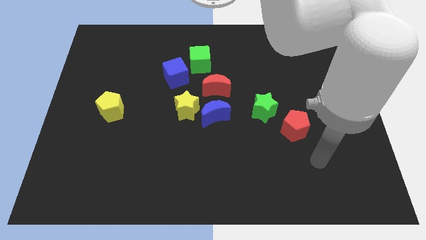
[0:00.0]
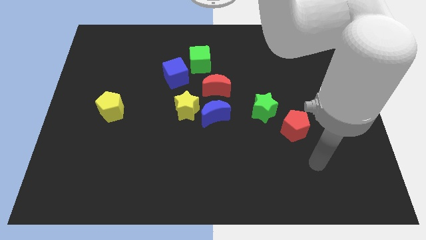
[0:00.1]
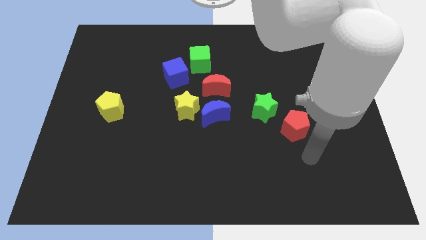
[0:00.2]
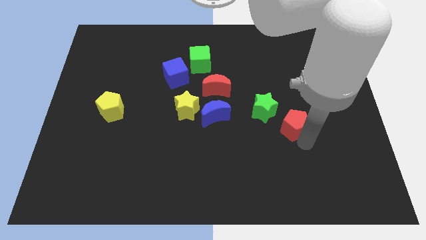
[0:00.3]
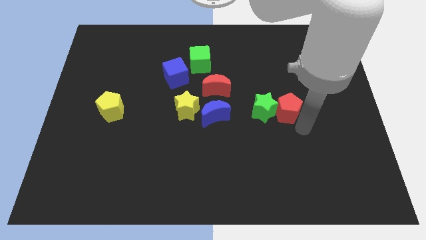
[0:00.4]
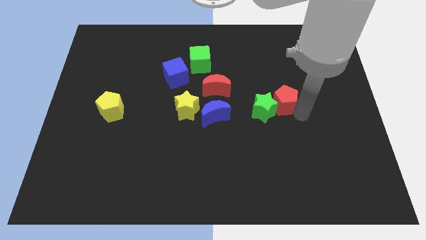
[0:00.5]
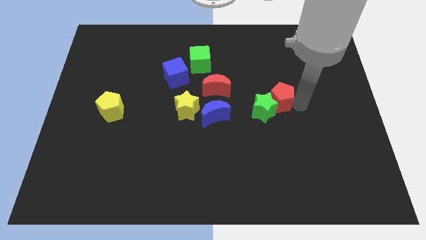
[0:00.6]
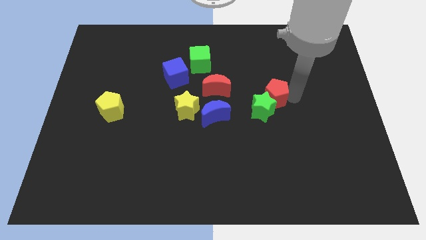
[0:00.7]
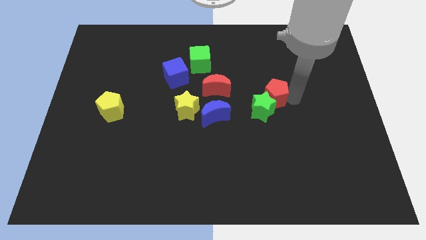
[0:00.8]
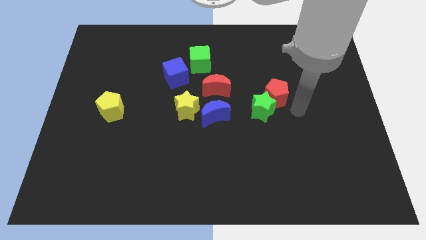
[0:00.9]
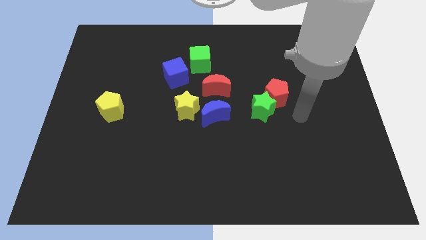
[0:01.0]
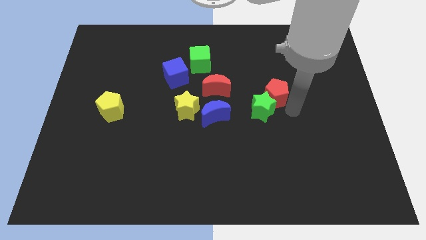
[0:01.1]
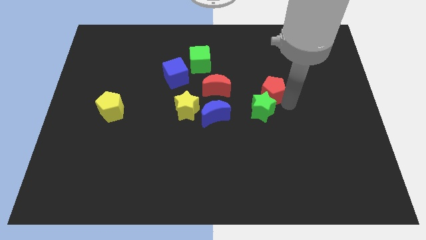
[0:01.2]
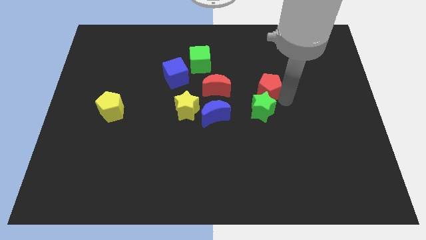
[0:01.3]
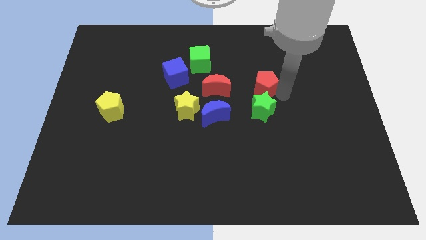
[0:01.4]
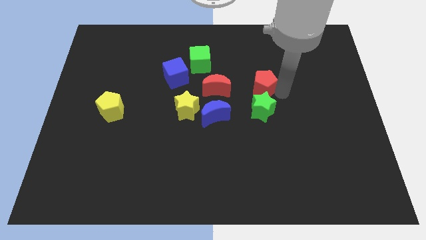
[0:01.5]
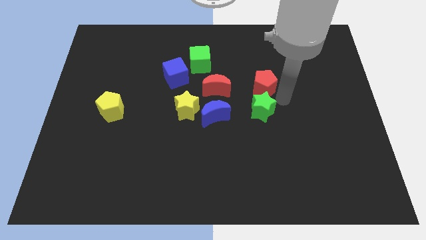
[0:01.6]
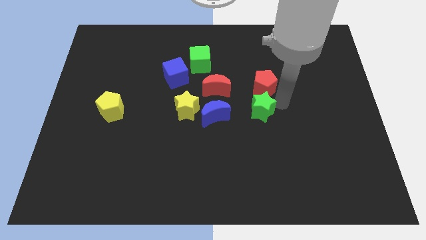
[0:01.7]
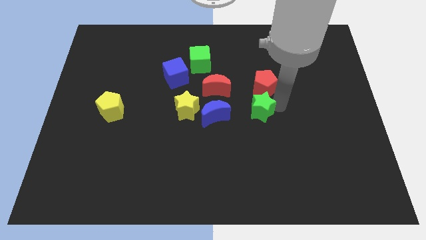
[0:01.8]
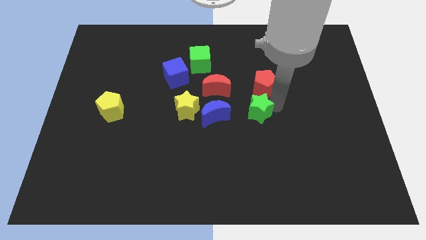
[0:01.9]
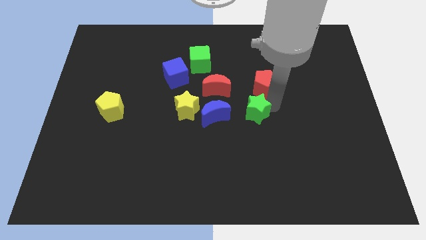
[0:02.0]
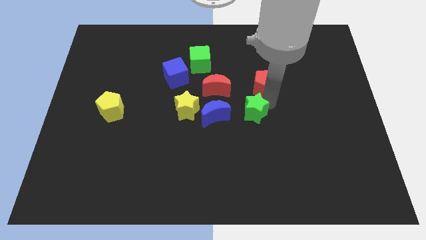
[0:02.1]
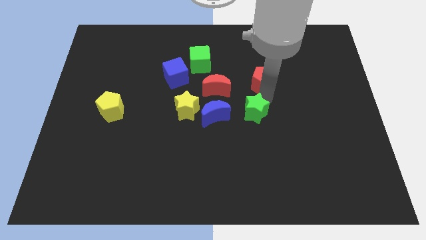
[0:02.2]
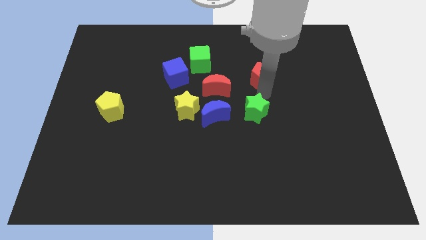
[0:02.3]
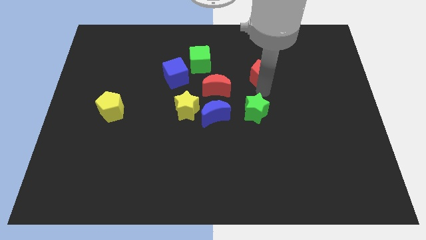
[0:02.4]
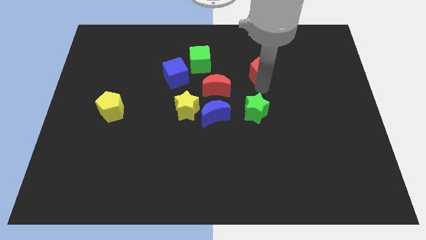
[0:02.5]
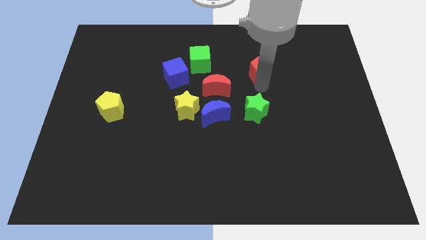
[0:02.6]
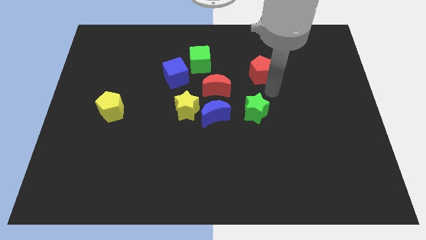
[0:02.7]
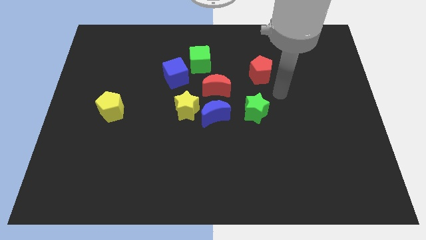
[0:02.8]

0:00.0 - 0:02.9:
place the red pentagon above the green star

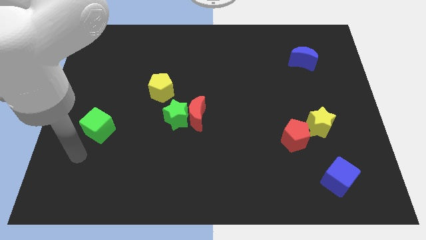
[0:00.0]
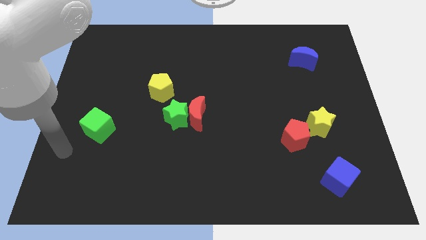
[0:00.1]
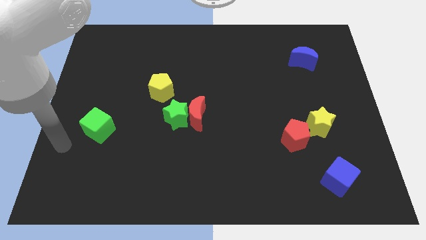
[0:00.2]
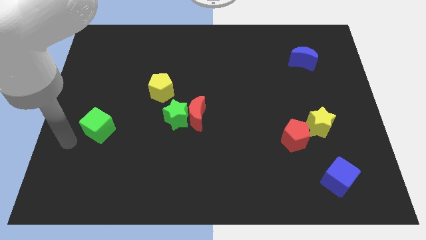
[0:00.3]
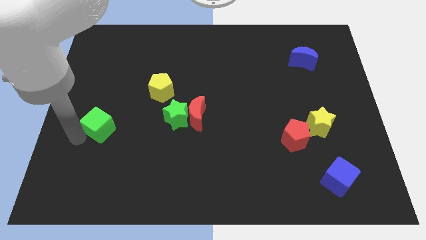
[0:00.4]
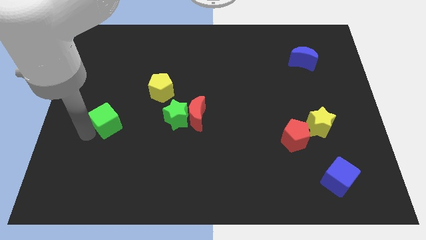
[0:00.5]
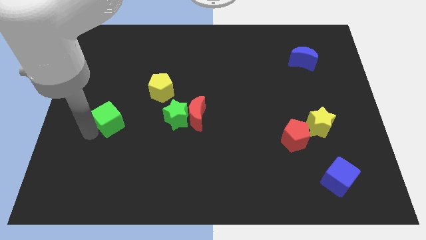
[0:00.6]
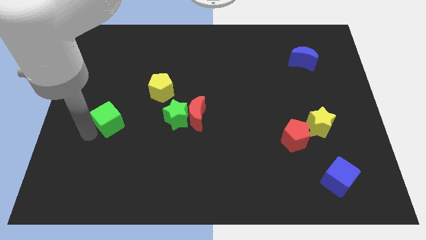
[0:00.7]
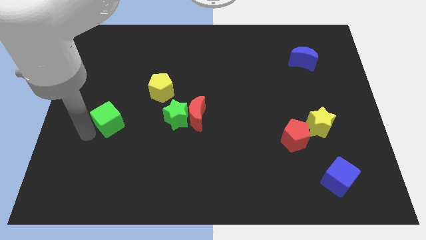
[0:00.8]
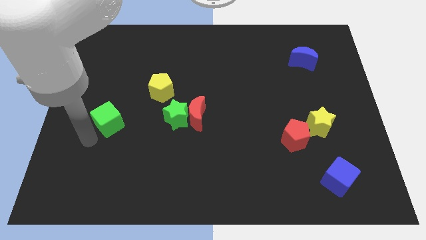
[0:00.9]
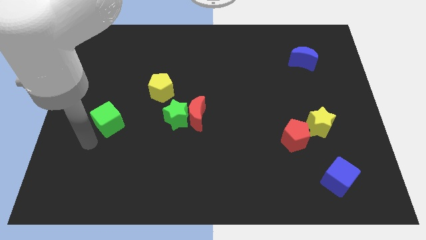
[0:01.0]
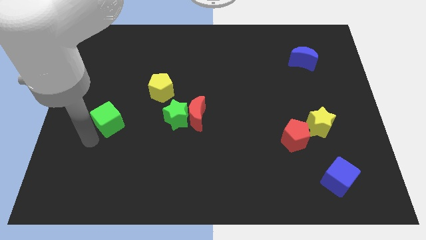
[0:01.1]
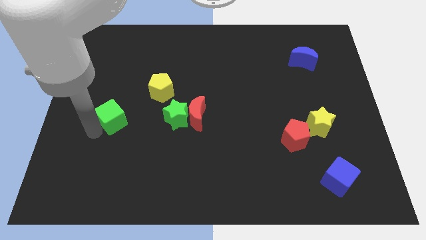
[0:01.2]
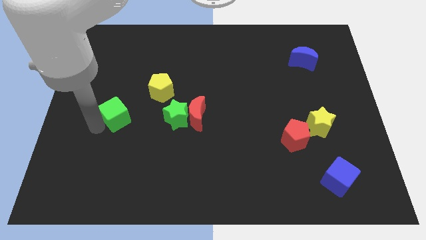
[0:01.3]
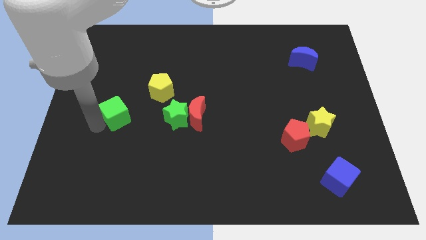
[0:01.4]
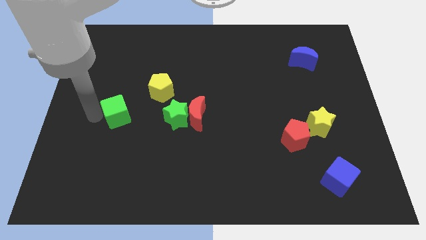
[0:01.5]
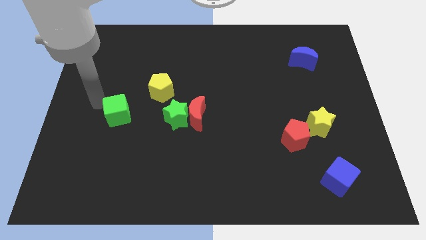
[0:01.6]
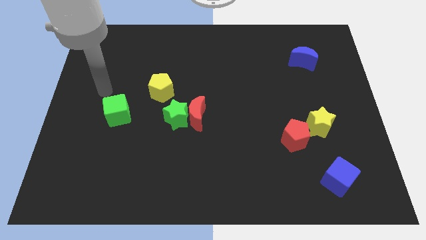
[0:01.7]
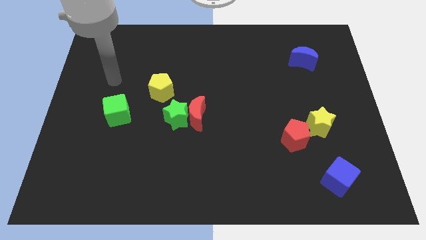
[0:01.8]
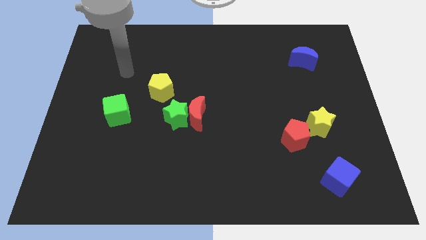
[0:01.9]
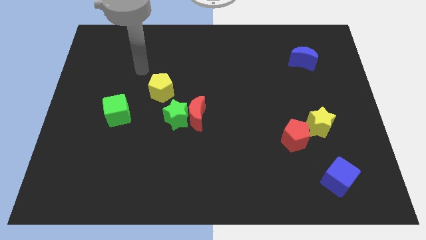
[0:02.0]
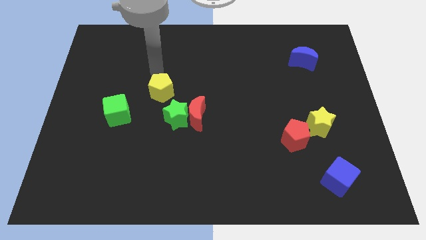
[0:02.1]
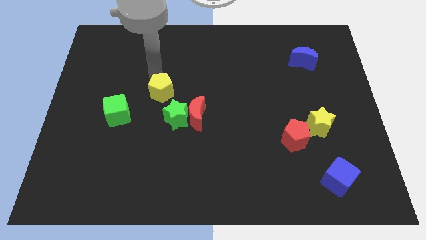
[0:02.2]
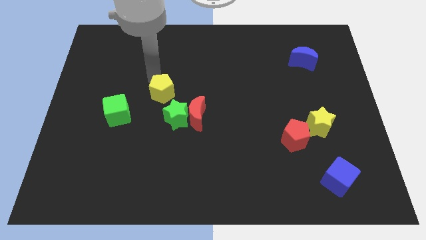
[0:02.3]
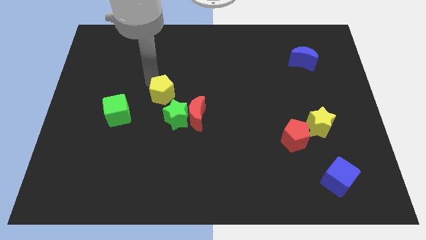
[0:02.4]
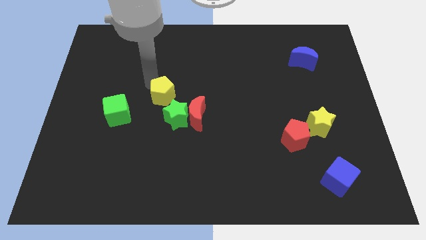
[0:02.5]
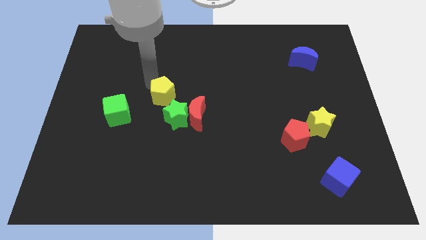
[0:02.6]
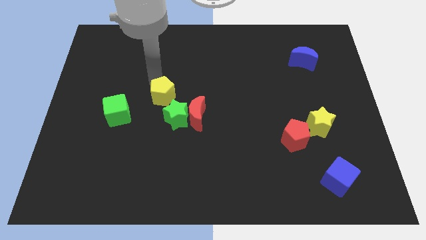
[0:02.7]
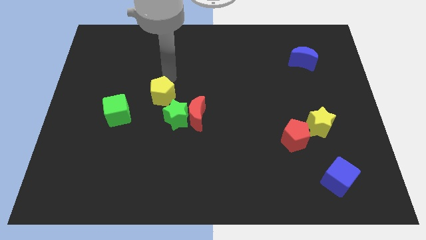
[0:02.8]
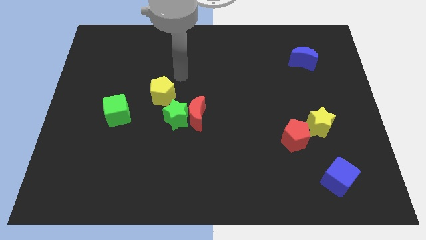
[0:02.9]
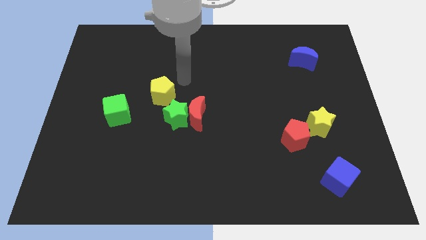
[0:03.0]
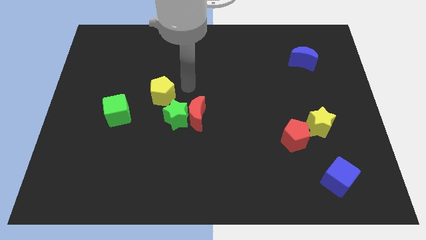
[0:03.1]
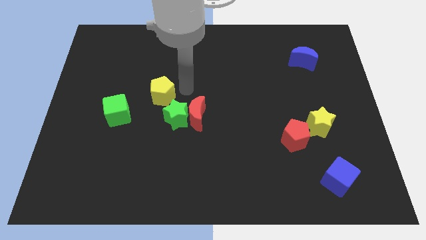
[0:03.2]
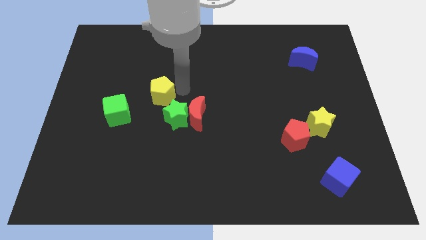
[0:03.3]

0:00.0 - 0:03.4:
slide the green cube and yellow pentagon towards the green star

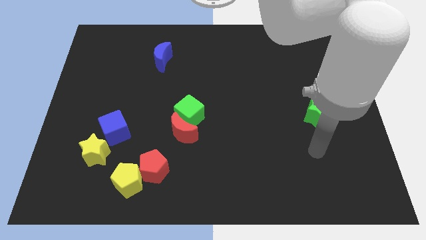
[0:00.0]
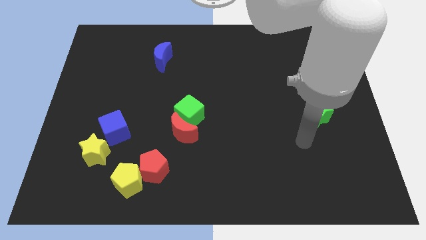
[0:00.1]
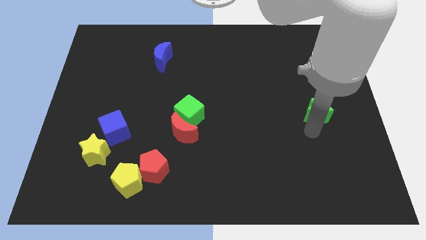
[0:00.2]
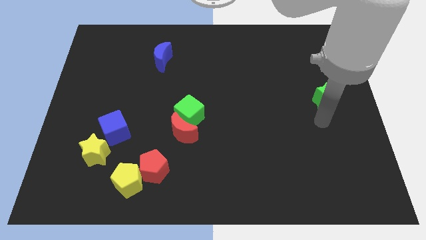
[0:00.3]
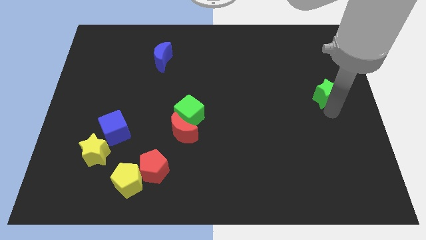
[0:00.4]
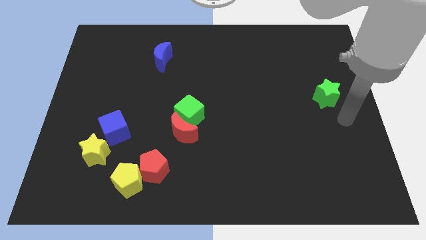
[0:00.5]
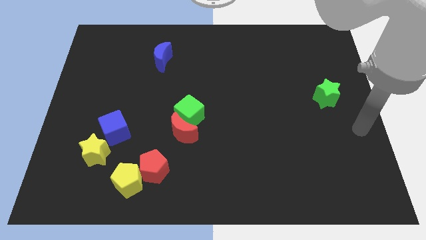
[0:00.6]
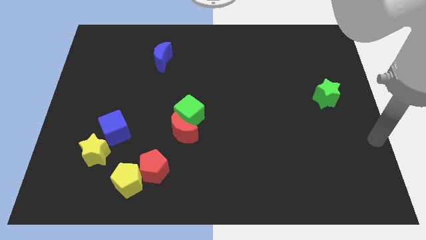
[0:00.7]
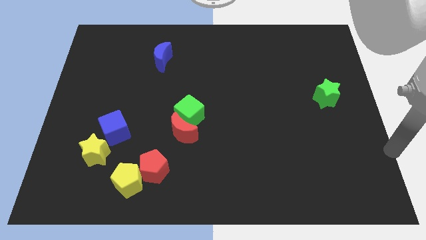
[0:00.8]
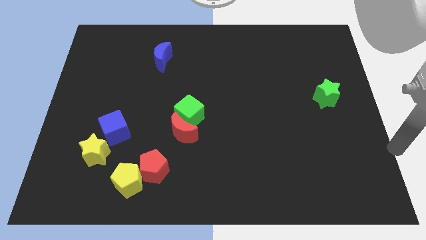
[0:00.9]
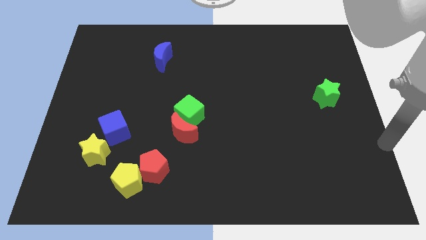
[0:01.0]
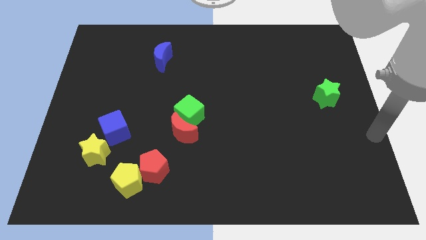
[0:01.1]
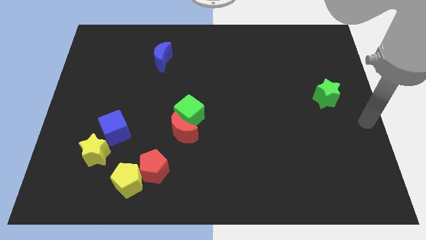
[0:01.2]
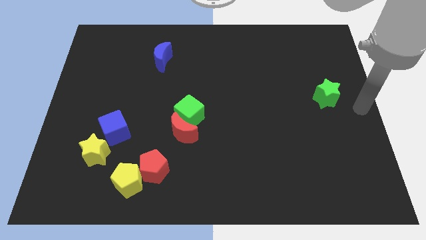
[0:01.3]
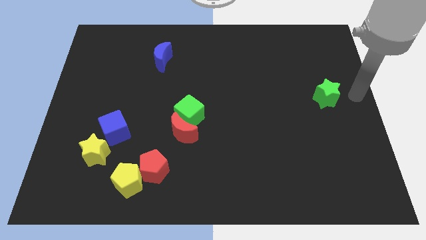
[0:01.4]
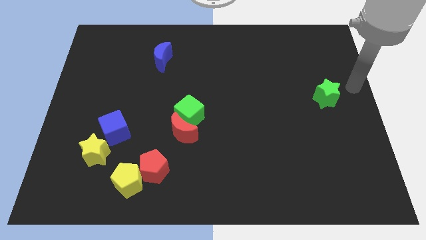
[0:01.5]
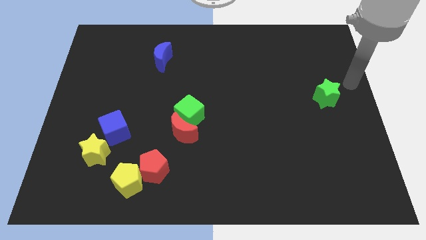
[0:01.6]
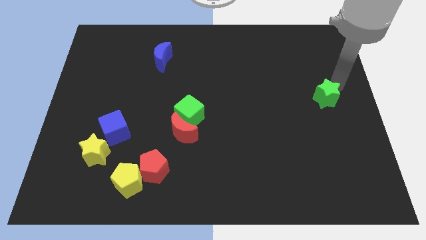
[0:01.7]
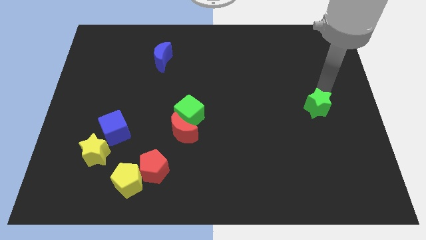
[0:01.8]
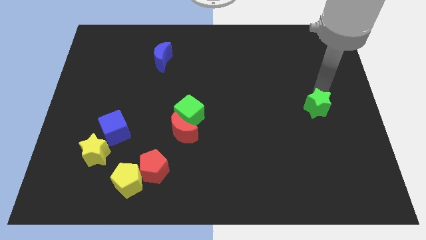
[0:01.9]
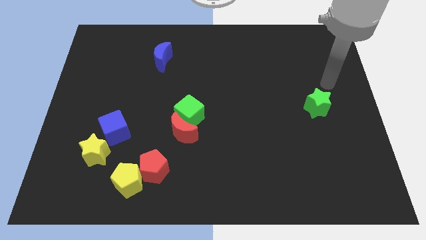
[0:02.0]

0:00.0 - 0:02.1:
adjust the green star at right center of the board

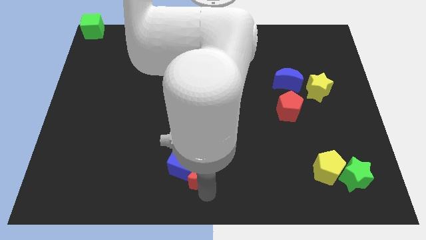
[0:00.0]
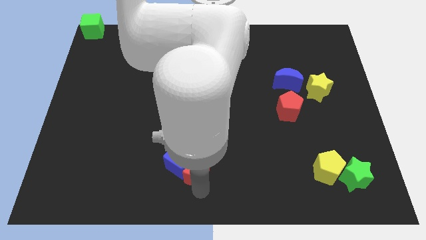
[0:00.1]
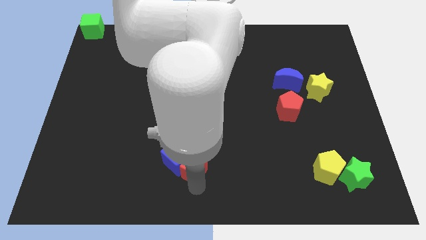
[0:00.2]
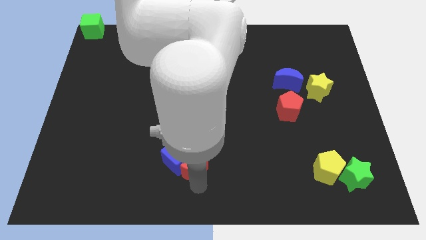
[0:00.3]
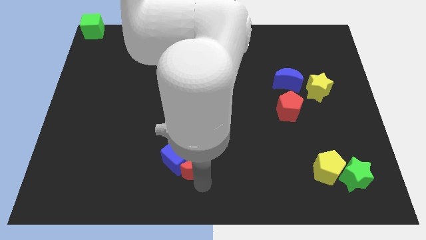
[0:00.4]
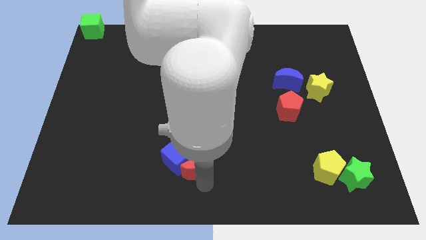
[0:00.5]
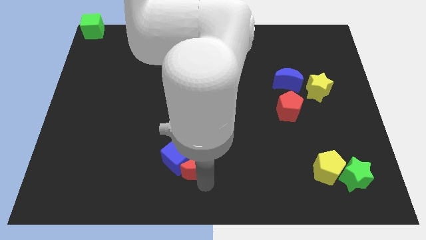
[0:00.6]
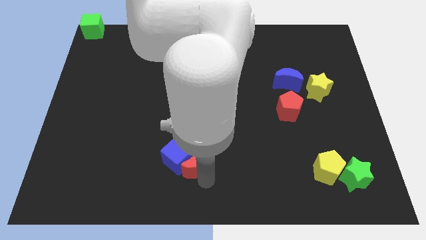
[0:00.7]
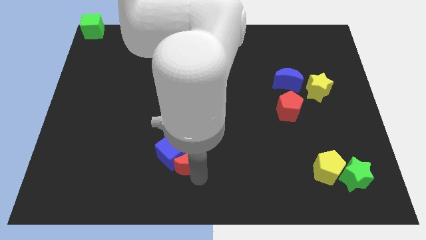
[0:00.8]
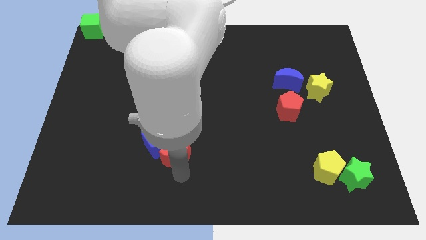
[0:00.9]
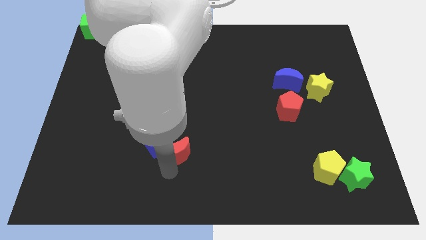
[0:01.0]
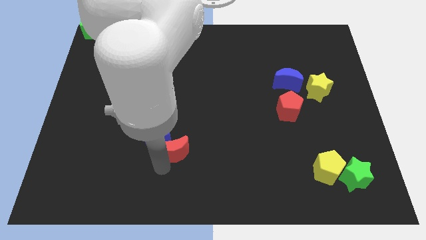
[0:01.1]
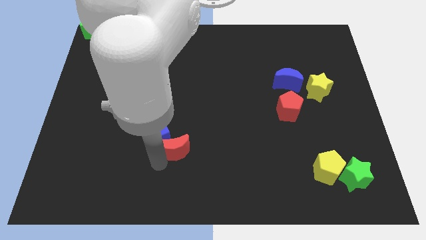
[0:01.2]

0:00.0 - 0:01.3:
drag the red moon slightly upwards
